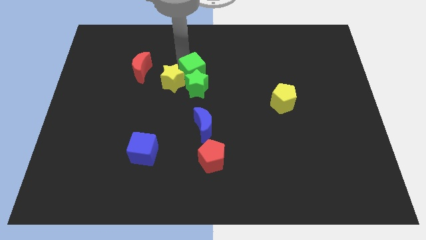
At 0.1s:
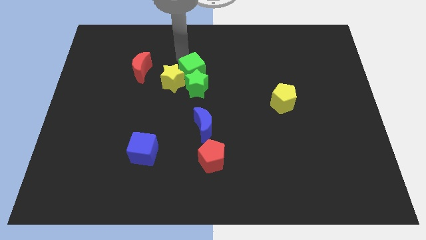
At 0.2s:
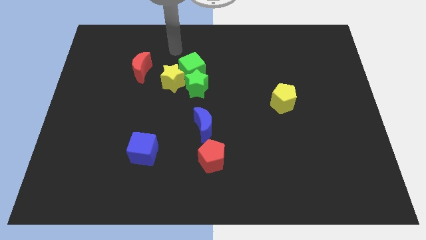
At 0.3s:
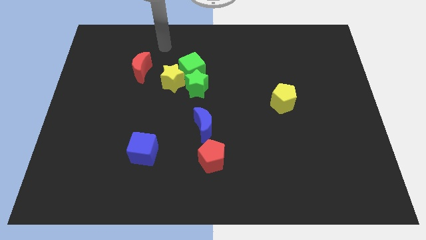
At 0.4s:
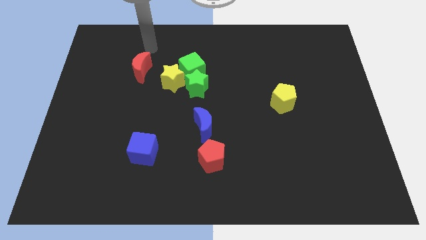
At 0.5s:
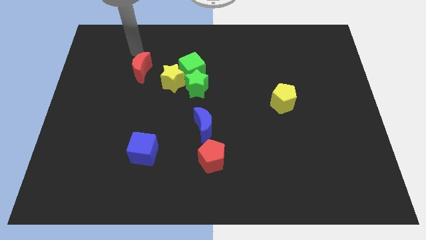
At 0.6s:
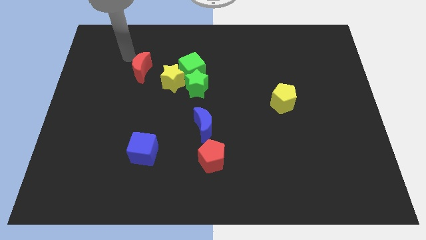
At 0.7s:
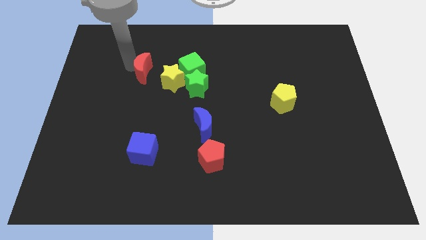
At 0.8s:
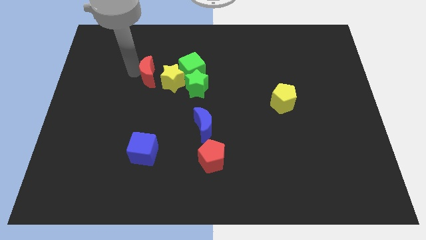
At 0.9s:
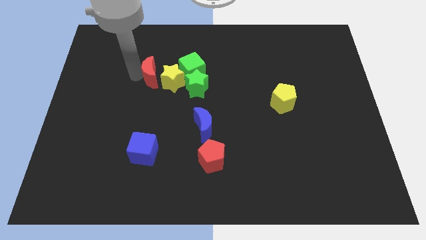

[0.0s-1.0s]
touch the left of the red moon

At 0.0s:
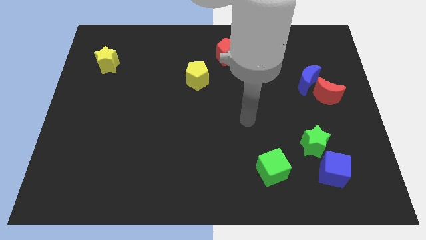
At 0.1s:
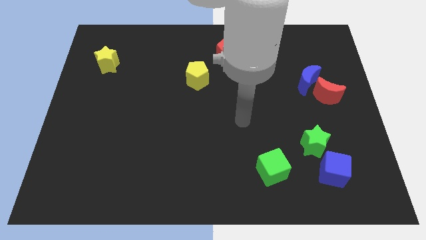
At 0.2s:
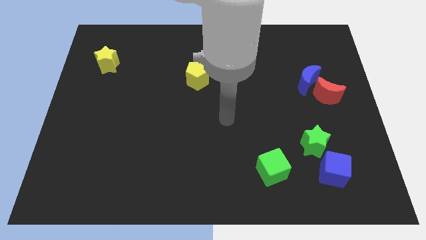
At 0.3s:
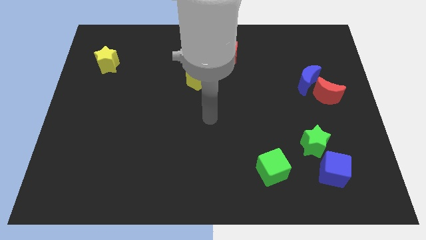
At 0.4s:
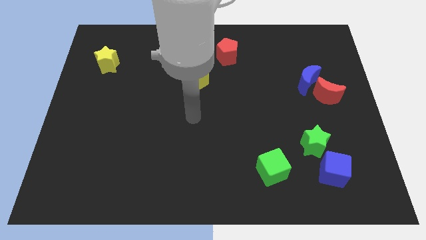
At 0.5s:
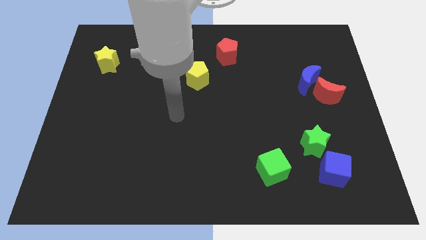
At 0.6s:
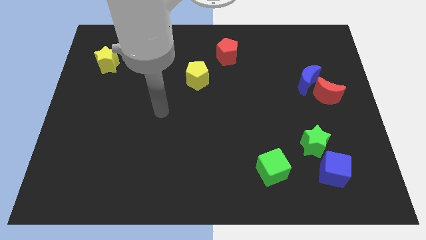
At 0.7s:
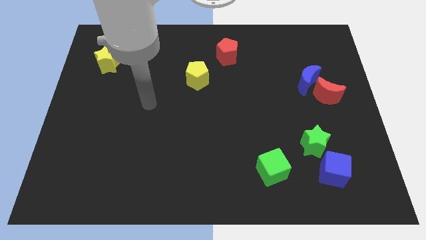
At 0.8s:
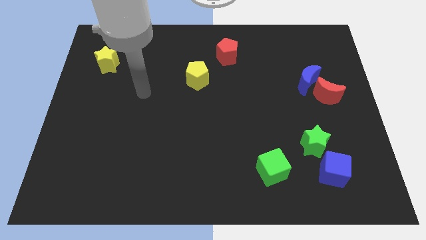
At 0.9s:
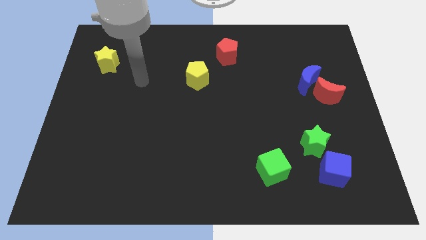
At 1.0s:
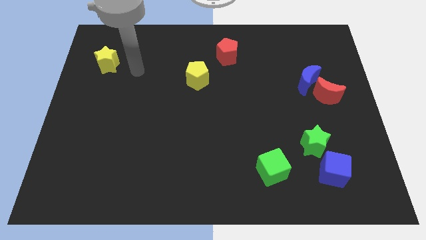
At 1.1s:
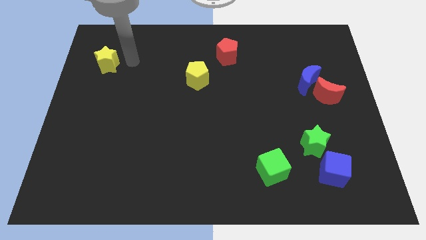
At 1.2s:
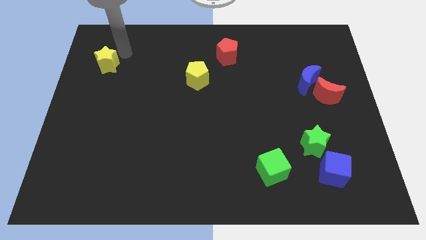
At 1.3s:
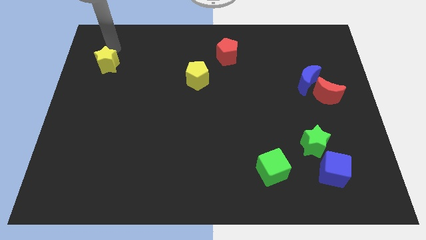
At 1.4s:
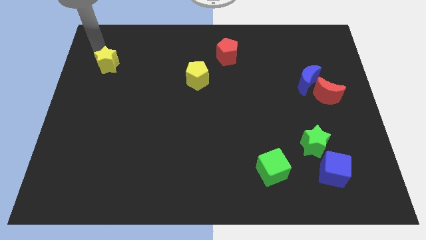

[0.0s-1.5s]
point the arm above the yellow star

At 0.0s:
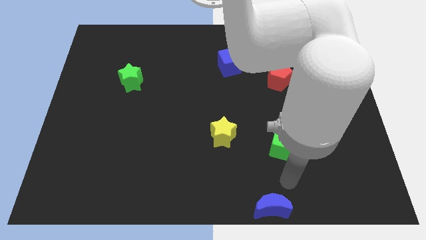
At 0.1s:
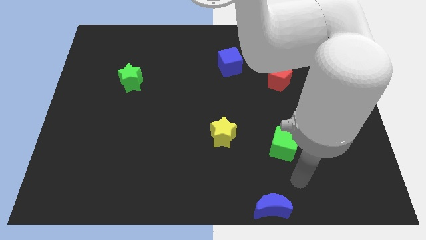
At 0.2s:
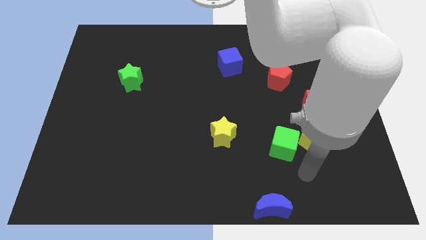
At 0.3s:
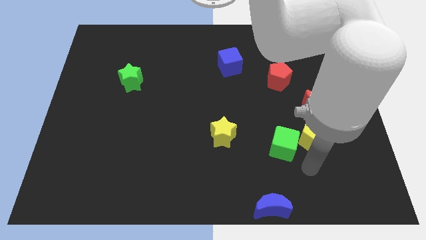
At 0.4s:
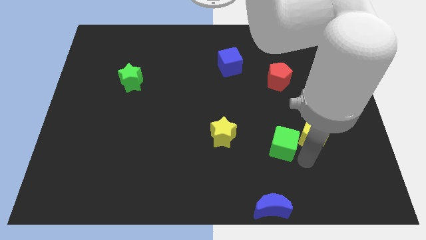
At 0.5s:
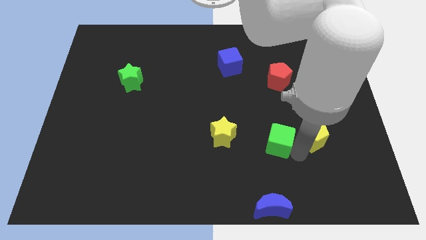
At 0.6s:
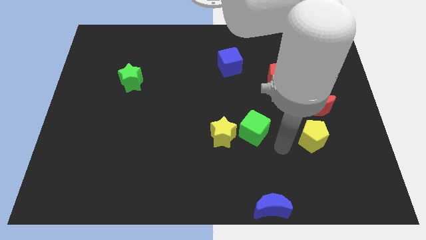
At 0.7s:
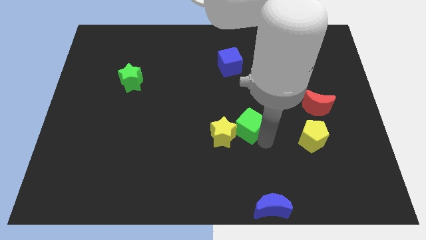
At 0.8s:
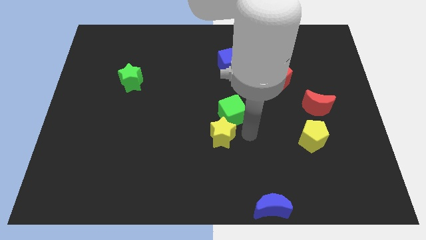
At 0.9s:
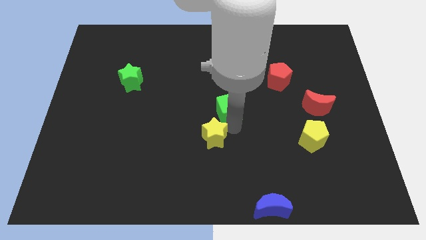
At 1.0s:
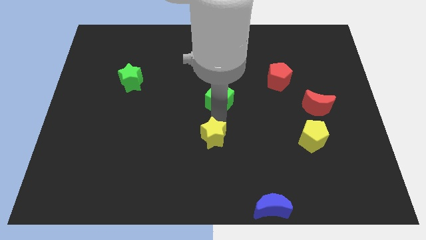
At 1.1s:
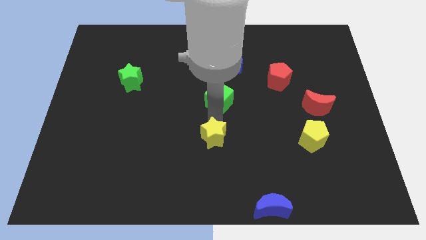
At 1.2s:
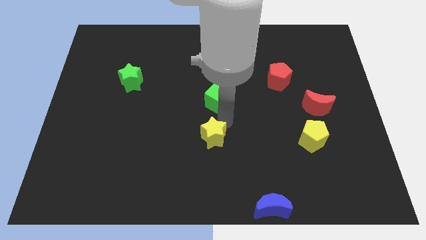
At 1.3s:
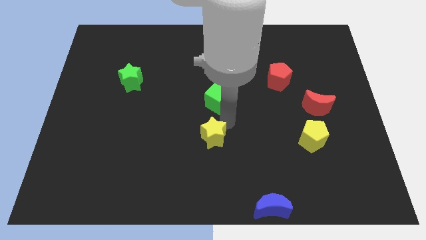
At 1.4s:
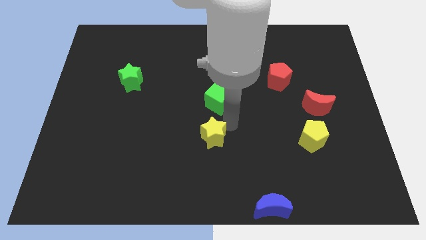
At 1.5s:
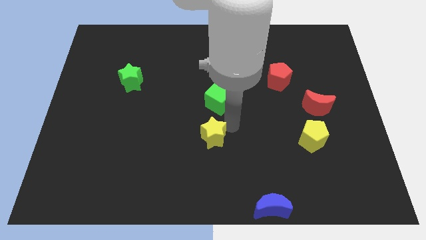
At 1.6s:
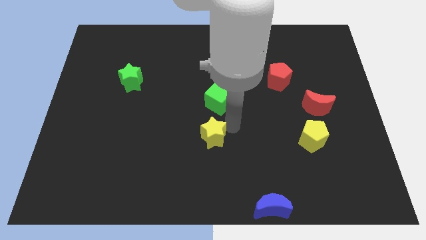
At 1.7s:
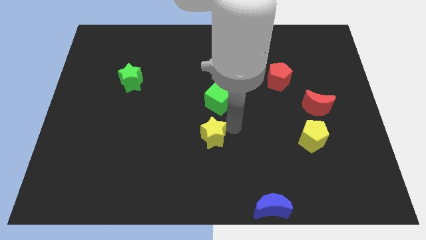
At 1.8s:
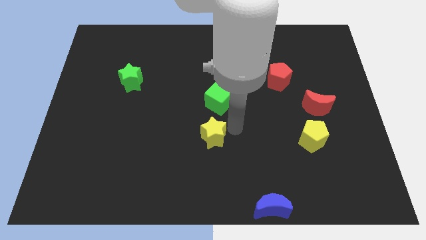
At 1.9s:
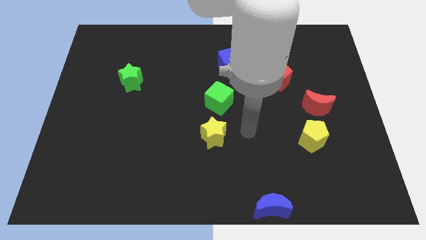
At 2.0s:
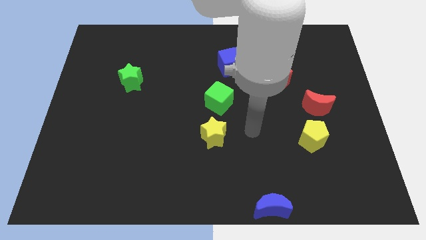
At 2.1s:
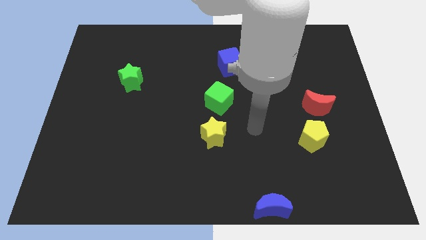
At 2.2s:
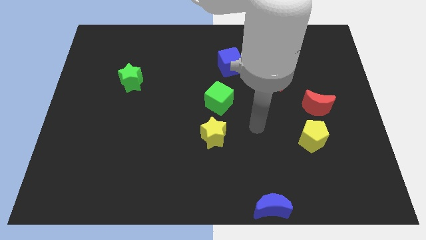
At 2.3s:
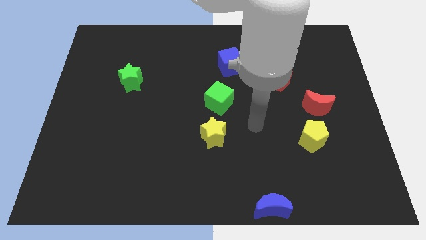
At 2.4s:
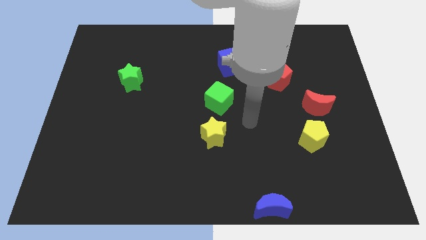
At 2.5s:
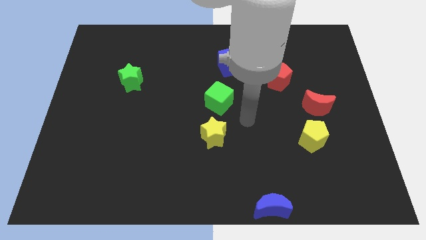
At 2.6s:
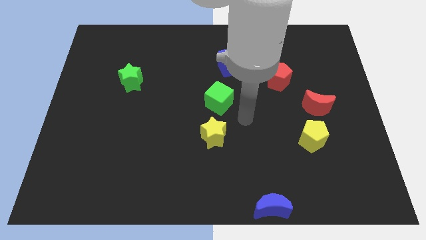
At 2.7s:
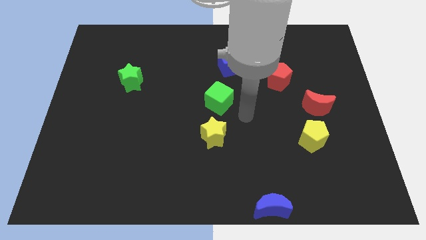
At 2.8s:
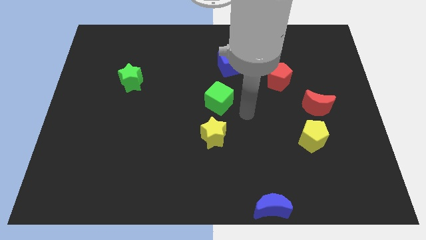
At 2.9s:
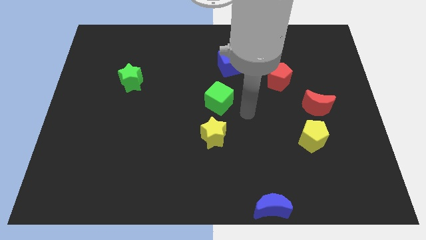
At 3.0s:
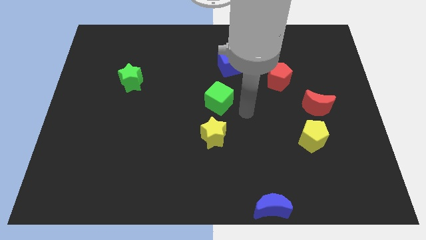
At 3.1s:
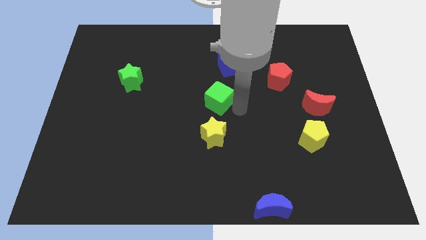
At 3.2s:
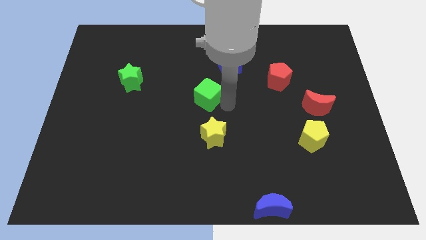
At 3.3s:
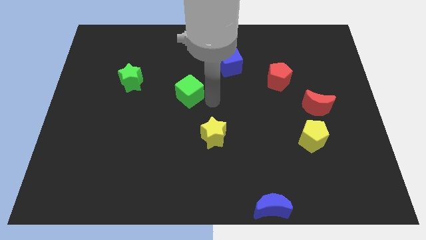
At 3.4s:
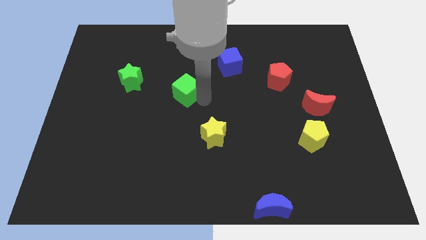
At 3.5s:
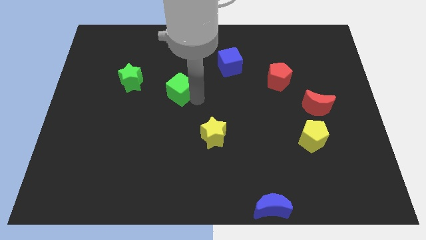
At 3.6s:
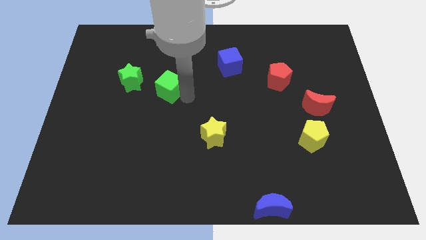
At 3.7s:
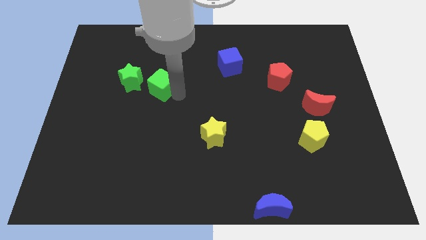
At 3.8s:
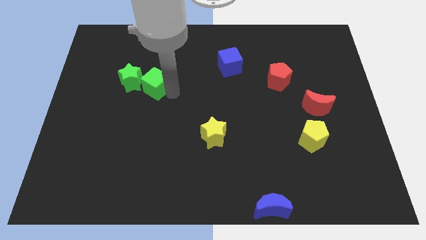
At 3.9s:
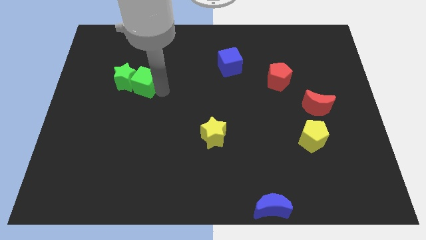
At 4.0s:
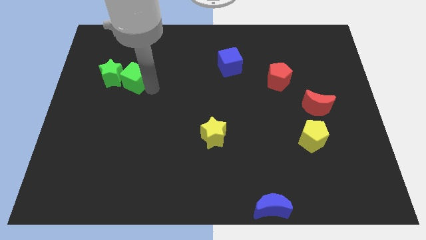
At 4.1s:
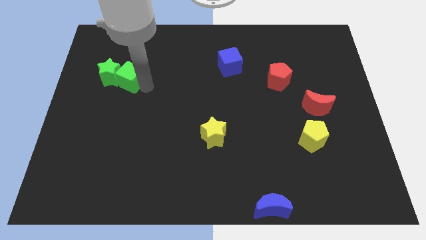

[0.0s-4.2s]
move green cube into green star

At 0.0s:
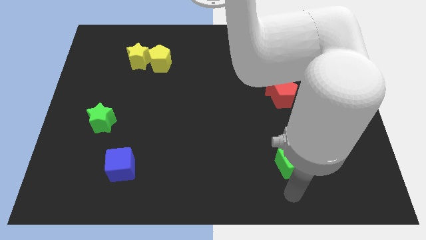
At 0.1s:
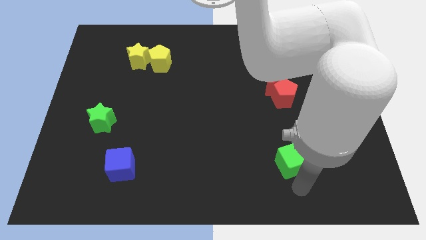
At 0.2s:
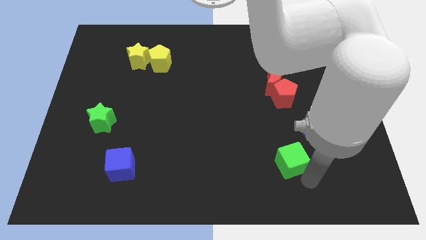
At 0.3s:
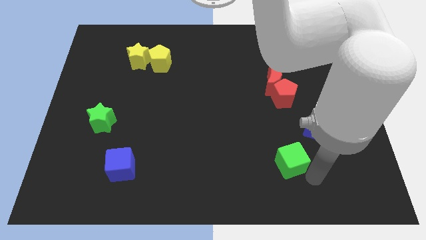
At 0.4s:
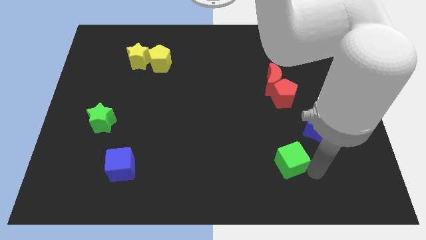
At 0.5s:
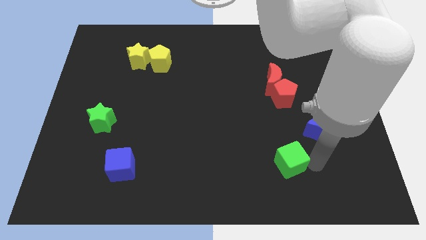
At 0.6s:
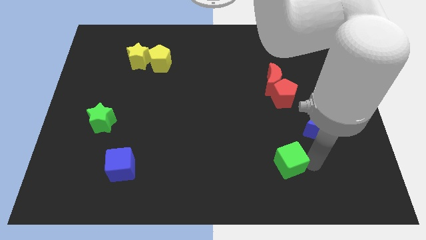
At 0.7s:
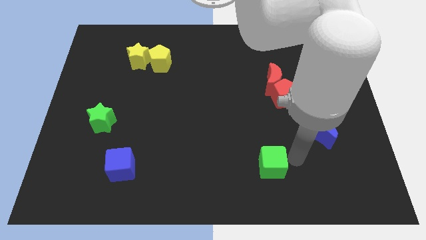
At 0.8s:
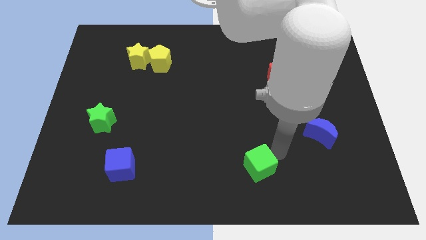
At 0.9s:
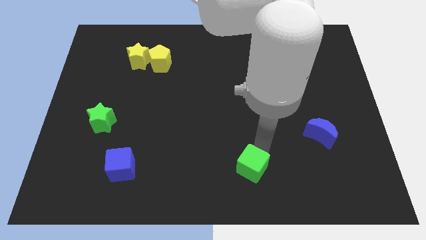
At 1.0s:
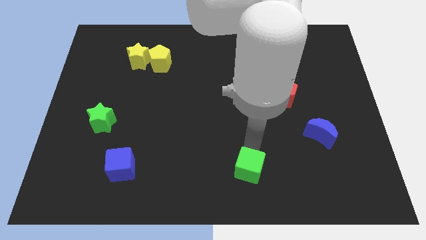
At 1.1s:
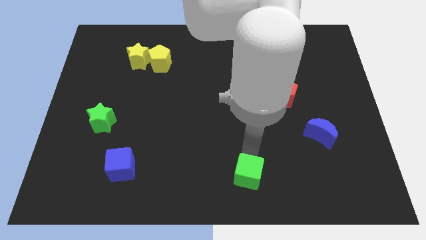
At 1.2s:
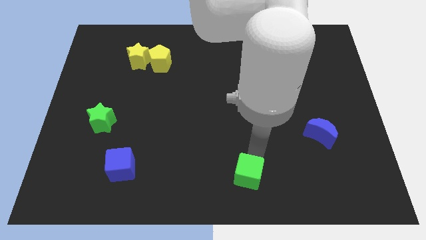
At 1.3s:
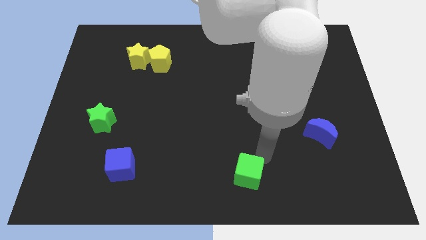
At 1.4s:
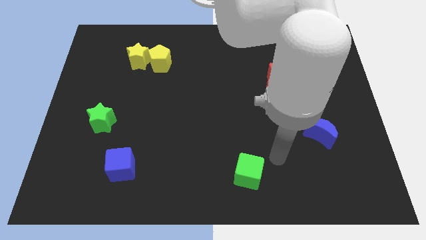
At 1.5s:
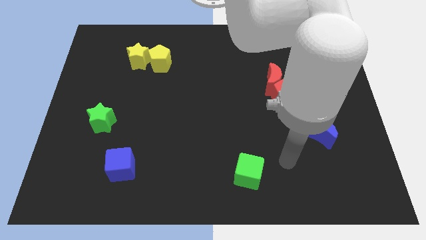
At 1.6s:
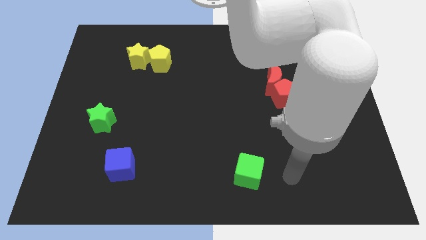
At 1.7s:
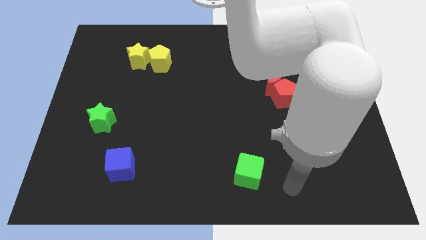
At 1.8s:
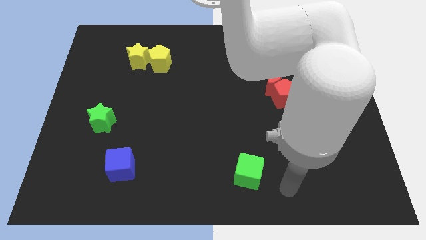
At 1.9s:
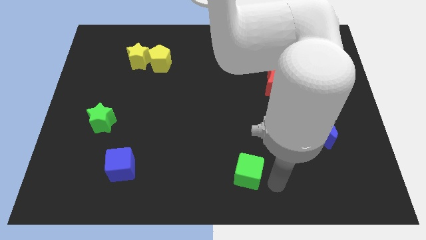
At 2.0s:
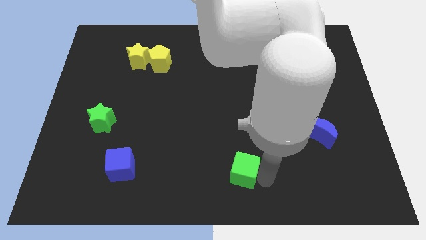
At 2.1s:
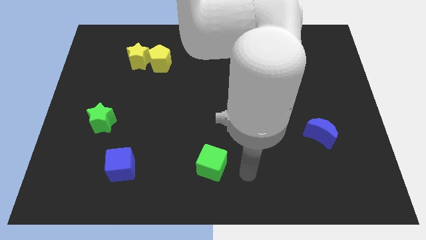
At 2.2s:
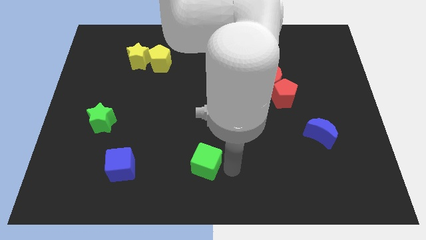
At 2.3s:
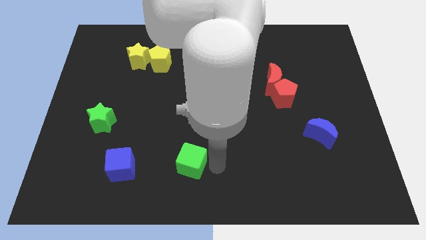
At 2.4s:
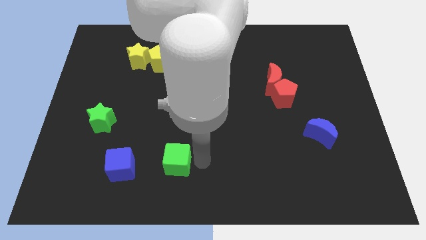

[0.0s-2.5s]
place the green cube diagonally bottom right to the green star
